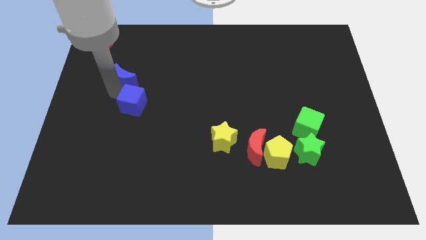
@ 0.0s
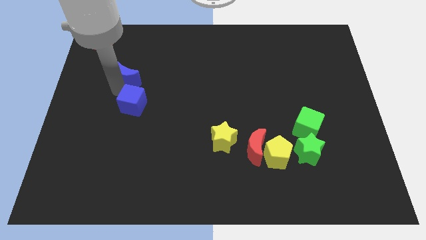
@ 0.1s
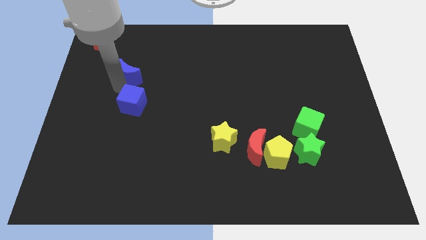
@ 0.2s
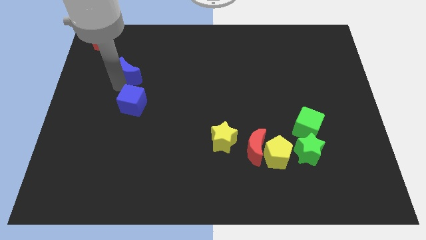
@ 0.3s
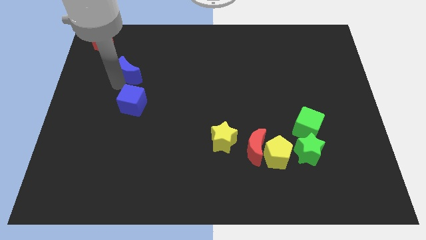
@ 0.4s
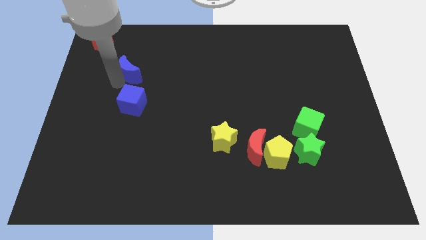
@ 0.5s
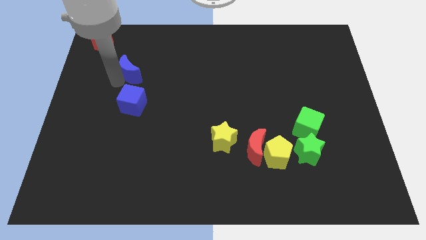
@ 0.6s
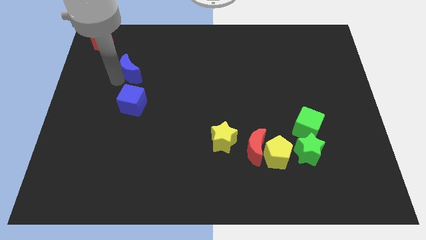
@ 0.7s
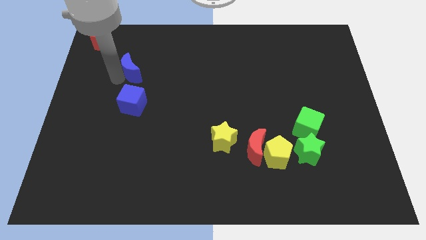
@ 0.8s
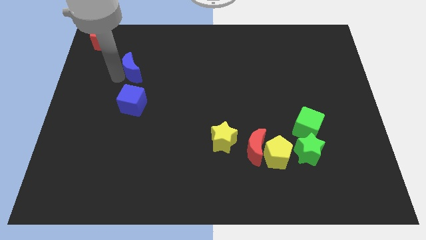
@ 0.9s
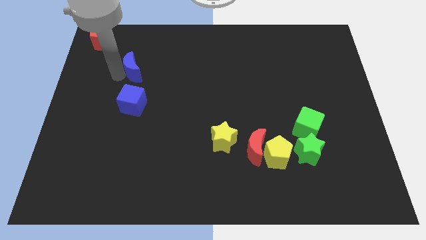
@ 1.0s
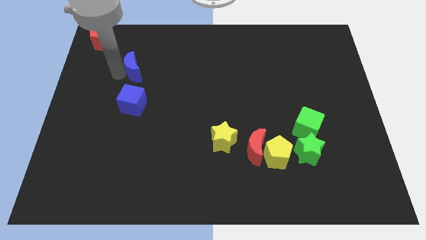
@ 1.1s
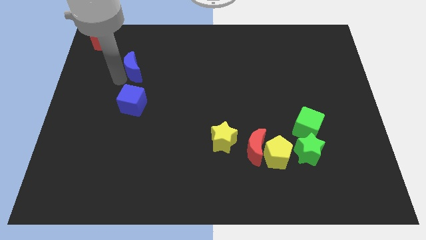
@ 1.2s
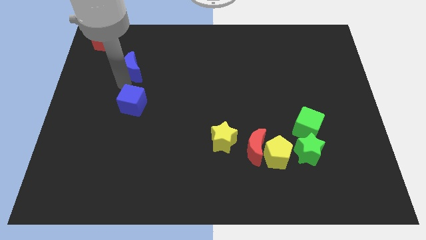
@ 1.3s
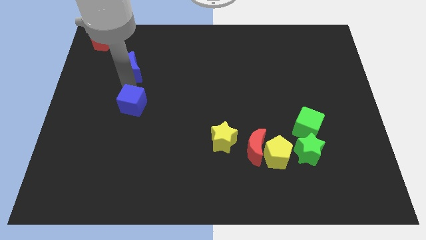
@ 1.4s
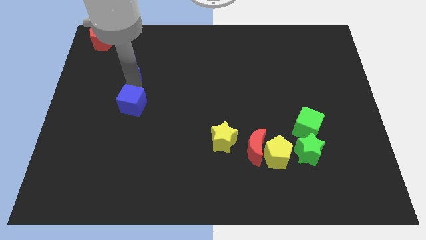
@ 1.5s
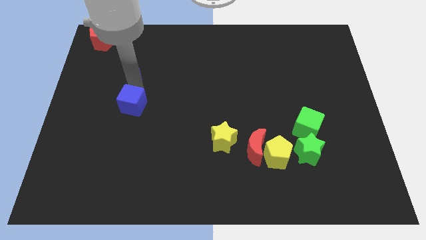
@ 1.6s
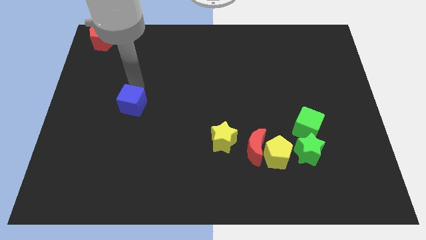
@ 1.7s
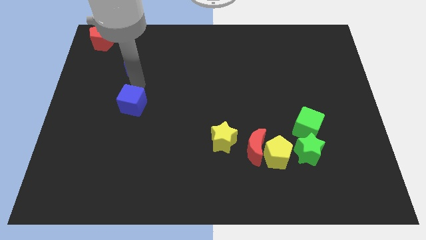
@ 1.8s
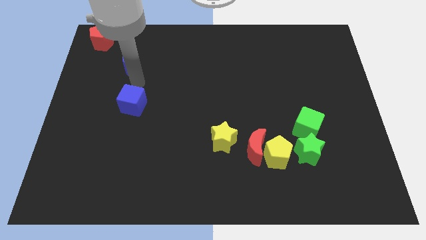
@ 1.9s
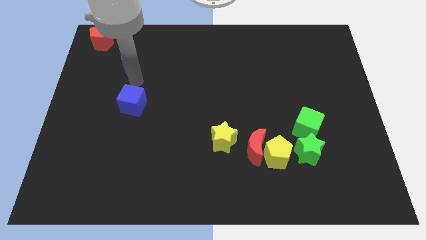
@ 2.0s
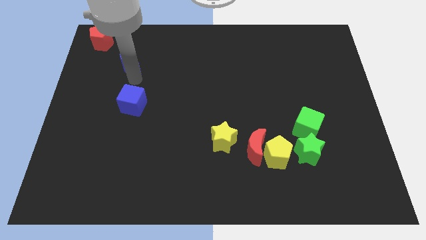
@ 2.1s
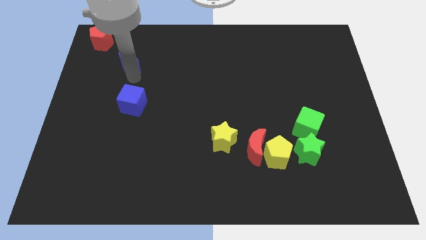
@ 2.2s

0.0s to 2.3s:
separate the blue crescent from the blue cube

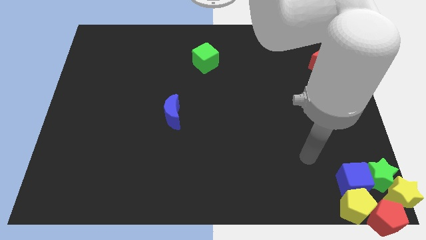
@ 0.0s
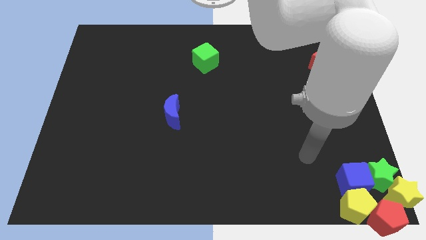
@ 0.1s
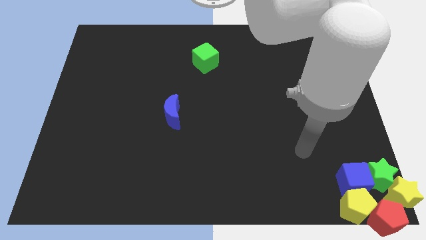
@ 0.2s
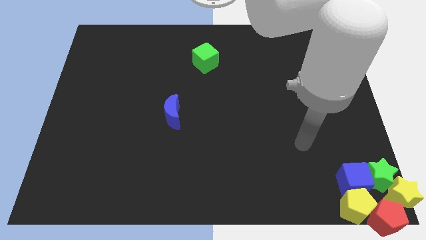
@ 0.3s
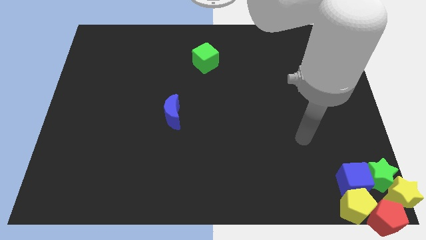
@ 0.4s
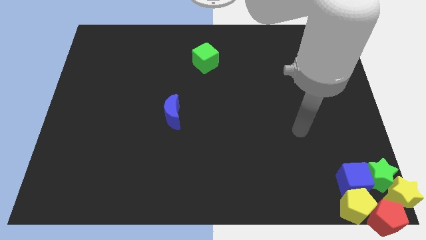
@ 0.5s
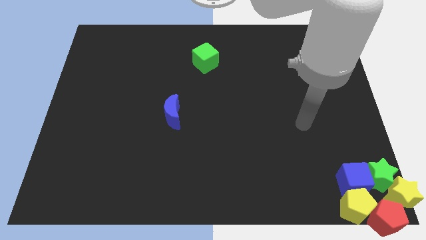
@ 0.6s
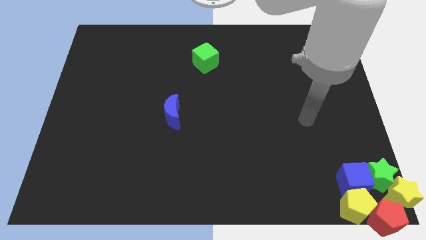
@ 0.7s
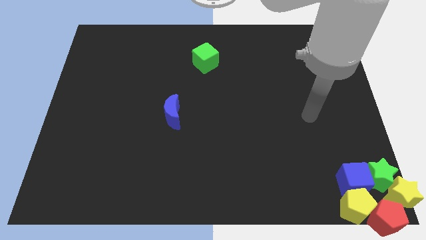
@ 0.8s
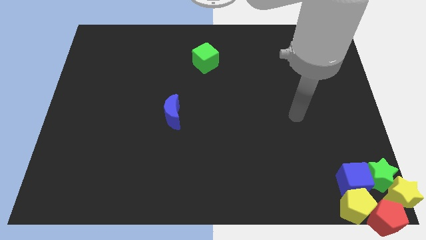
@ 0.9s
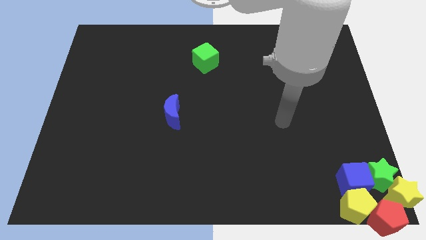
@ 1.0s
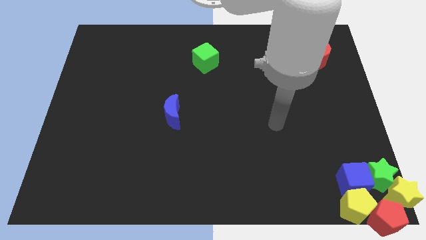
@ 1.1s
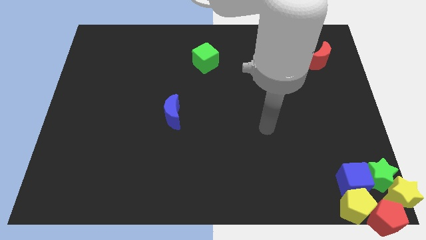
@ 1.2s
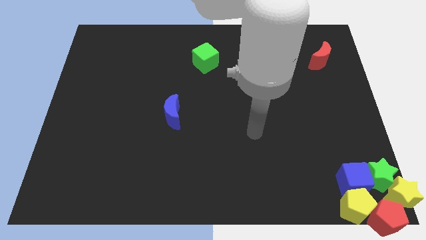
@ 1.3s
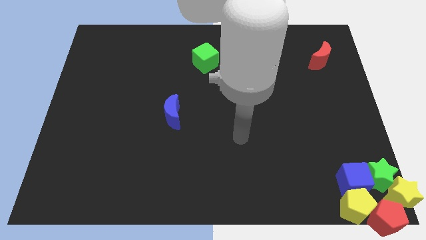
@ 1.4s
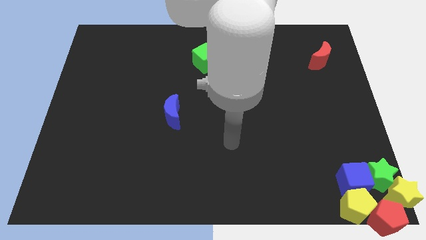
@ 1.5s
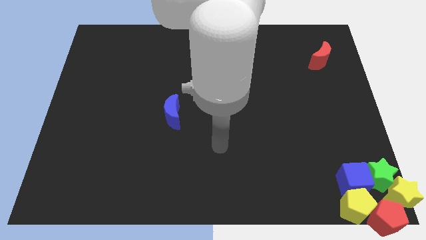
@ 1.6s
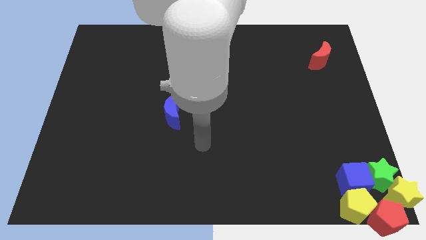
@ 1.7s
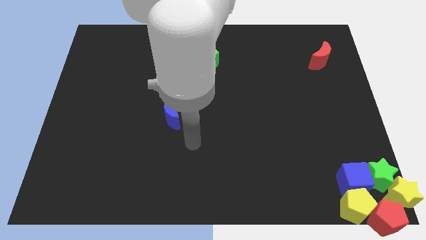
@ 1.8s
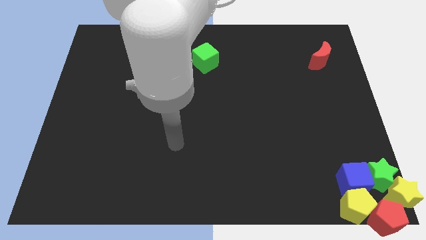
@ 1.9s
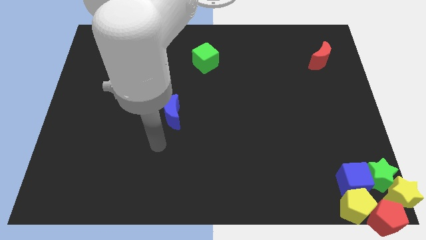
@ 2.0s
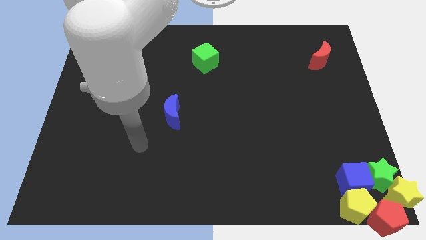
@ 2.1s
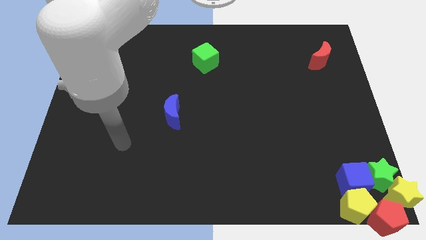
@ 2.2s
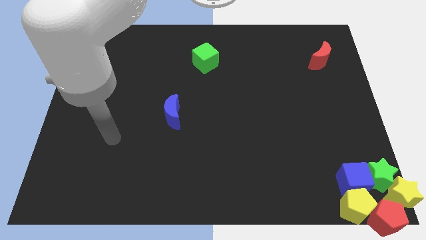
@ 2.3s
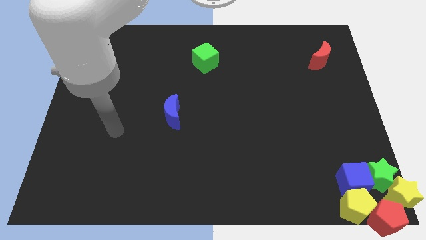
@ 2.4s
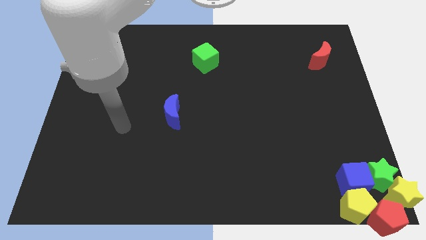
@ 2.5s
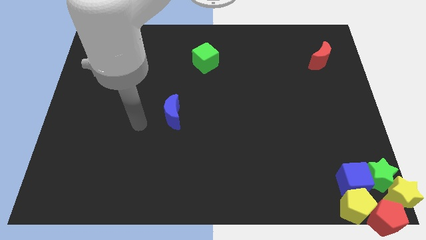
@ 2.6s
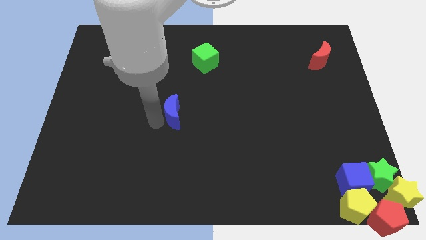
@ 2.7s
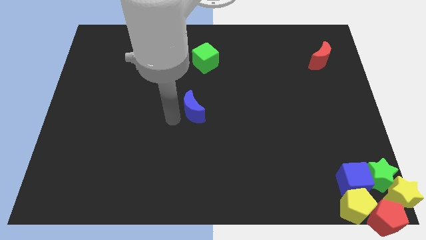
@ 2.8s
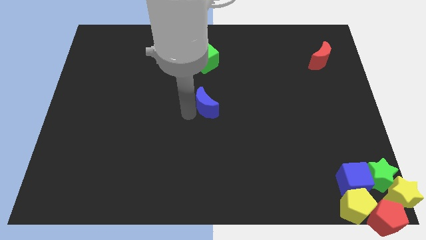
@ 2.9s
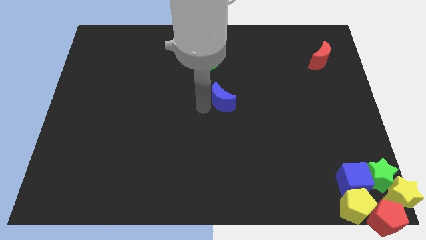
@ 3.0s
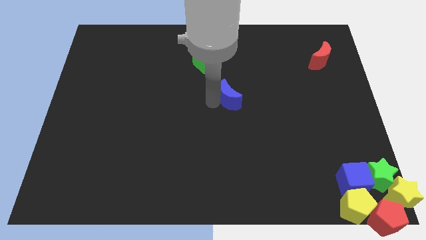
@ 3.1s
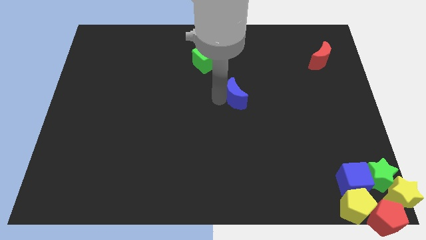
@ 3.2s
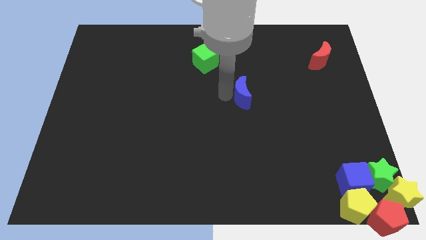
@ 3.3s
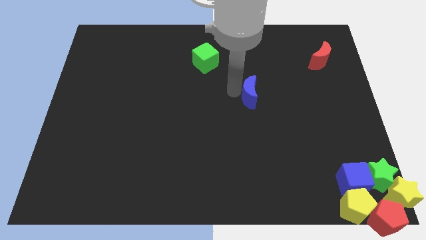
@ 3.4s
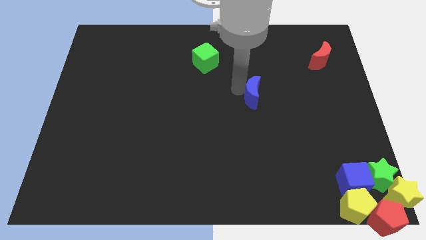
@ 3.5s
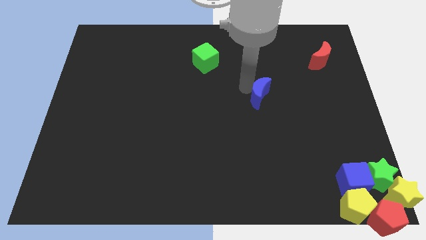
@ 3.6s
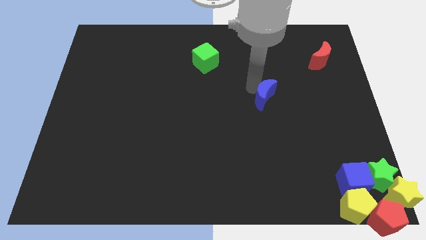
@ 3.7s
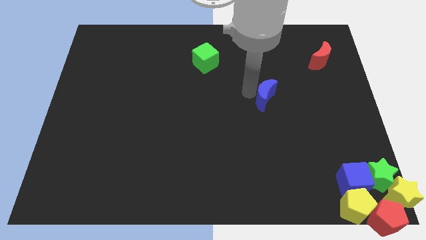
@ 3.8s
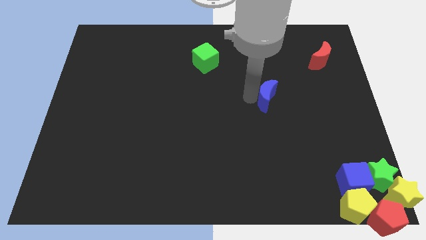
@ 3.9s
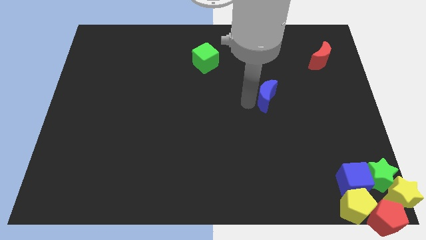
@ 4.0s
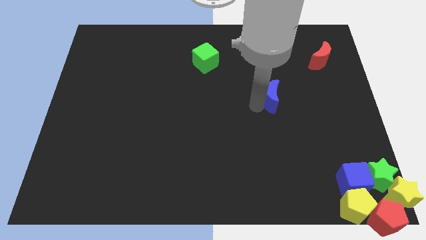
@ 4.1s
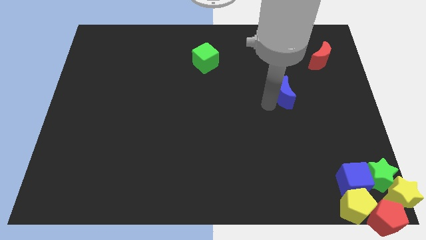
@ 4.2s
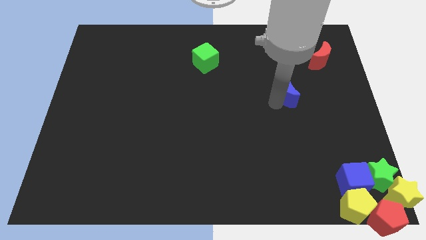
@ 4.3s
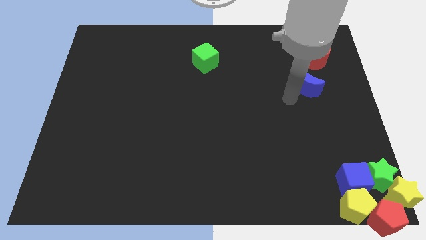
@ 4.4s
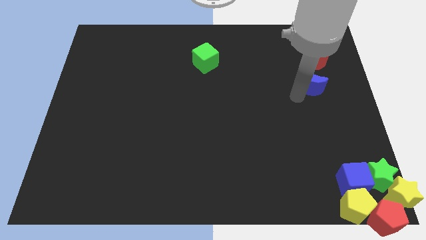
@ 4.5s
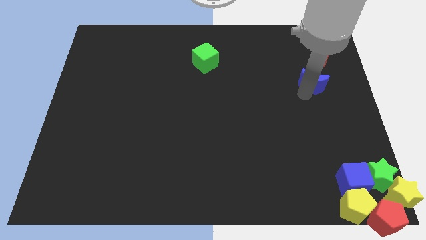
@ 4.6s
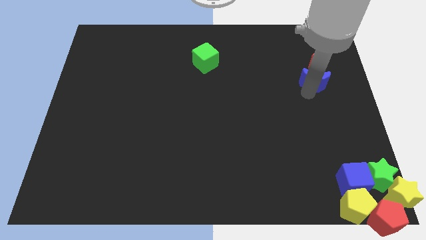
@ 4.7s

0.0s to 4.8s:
place the blue moon below the red moon

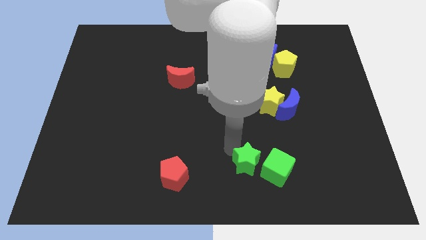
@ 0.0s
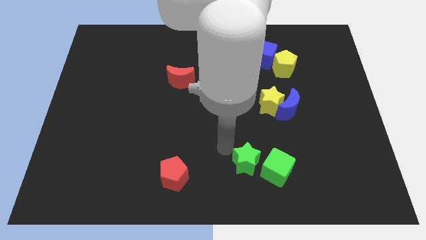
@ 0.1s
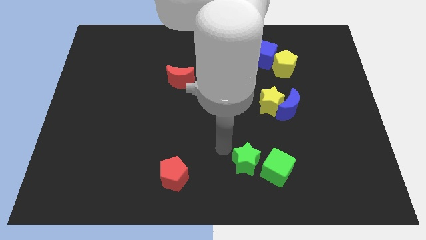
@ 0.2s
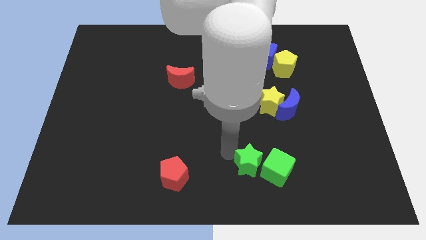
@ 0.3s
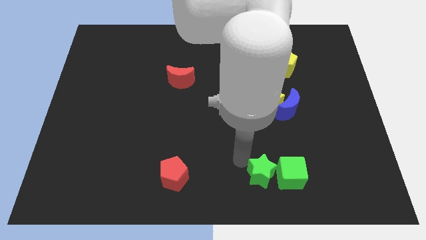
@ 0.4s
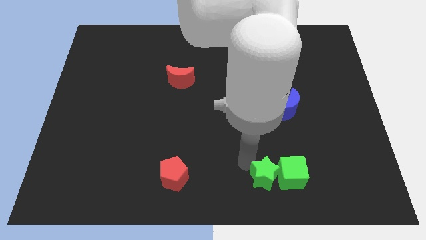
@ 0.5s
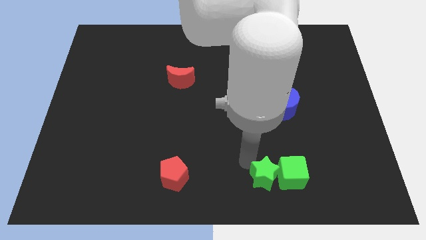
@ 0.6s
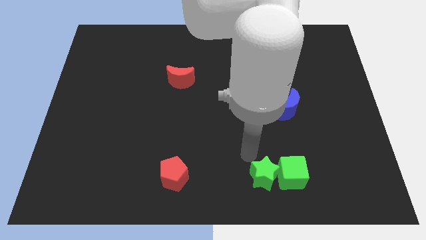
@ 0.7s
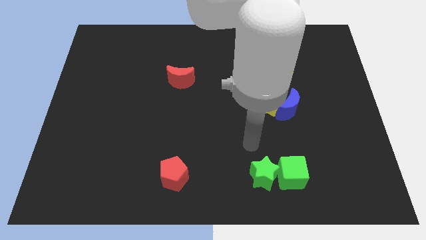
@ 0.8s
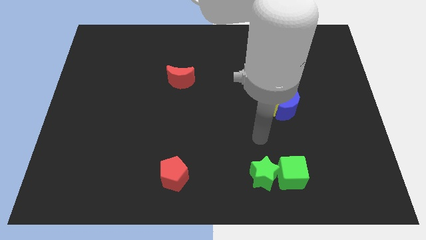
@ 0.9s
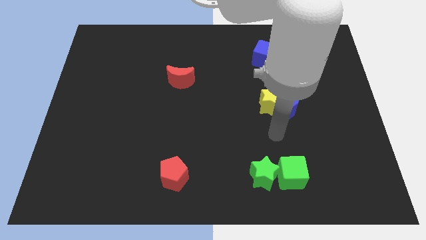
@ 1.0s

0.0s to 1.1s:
push the green star into the green cube

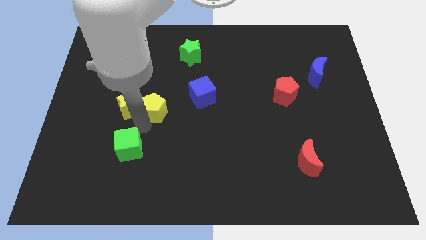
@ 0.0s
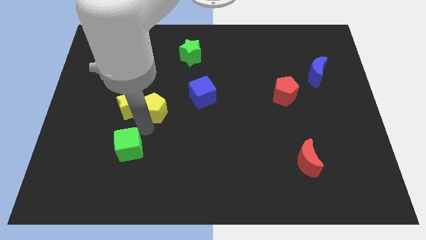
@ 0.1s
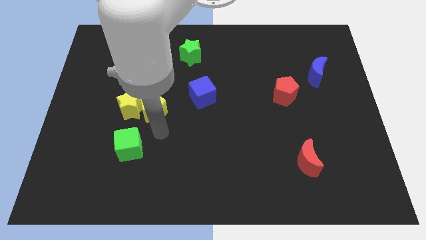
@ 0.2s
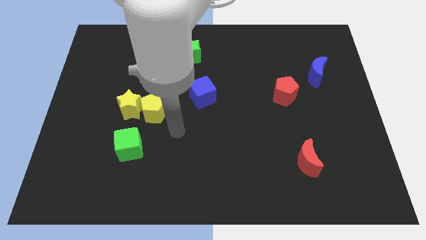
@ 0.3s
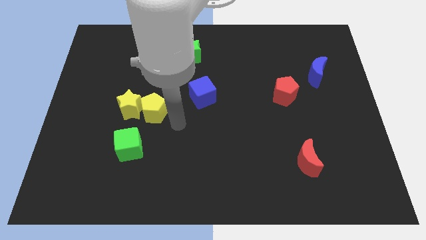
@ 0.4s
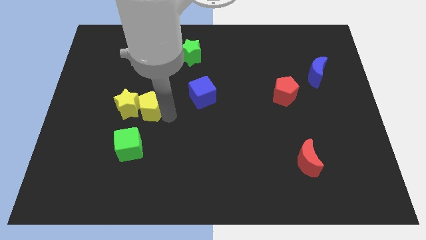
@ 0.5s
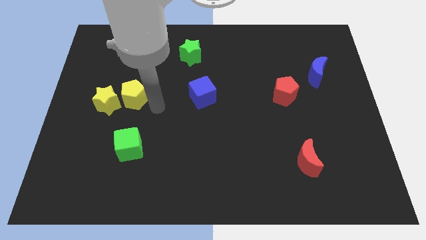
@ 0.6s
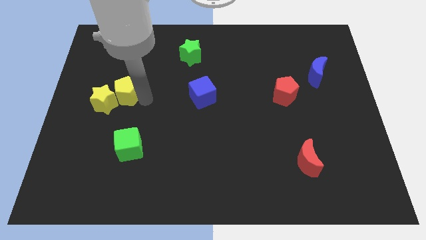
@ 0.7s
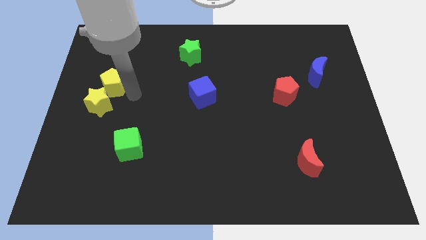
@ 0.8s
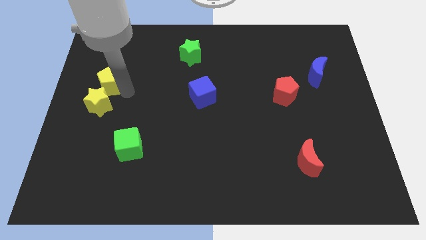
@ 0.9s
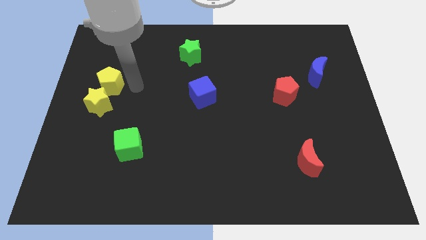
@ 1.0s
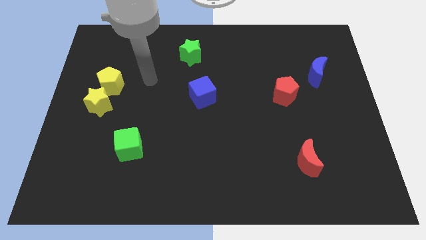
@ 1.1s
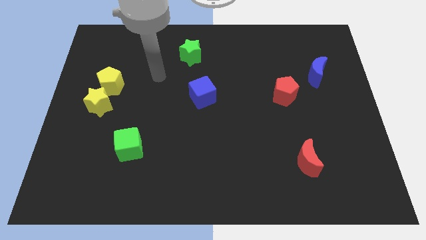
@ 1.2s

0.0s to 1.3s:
push the yellow blocks towards the left side of the board
